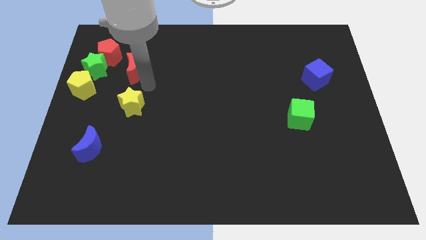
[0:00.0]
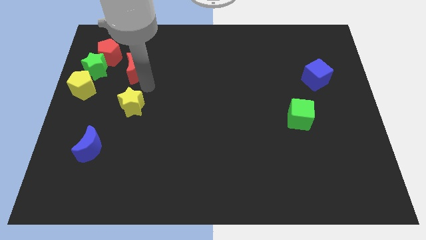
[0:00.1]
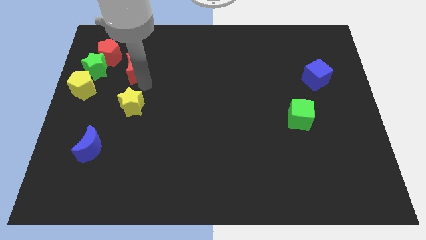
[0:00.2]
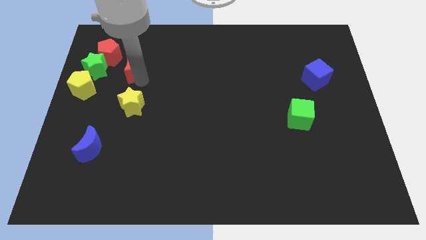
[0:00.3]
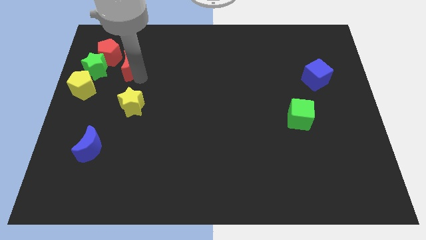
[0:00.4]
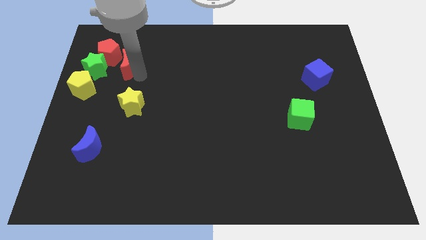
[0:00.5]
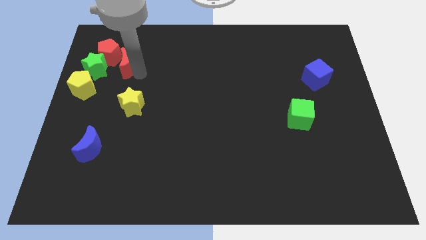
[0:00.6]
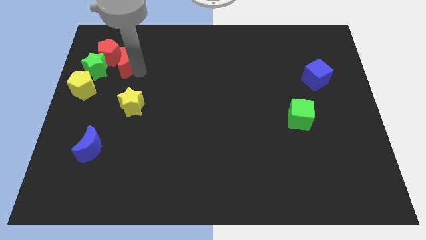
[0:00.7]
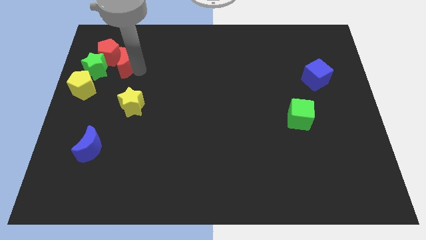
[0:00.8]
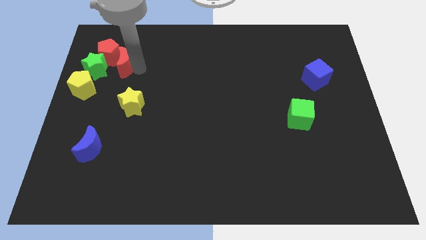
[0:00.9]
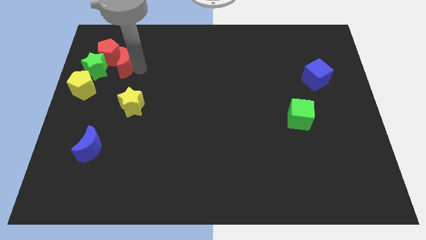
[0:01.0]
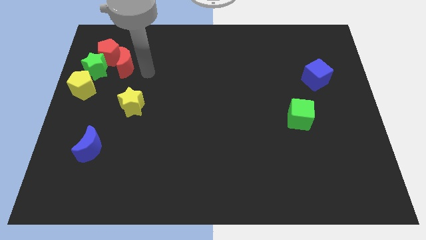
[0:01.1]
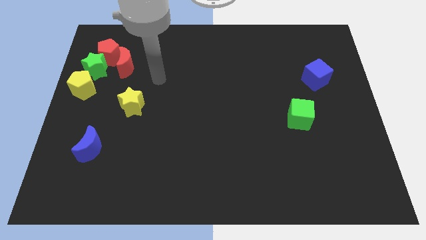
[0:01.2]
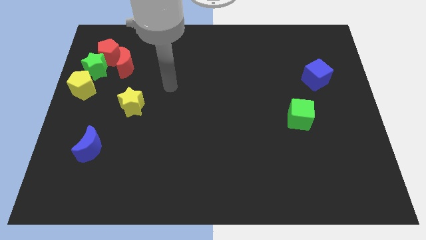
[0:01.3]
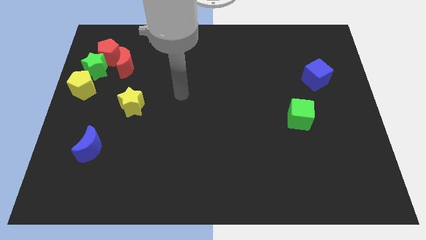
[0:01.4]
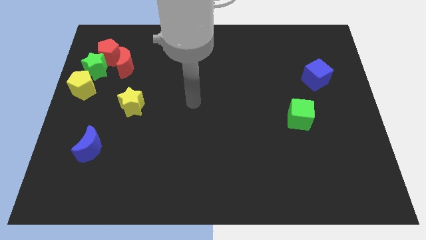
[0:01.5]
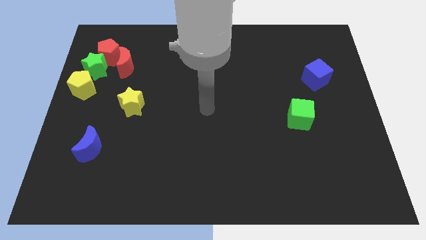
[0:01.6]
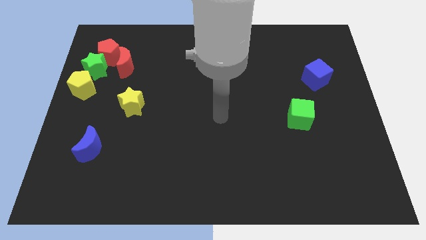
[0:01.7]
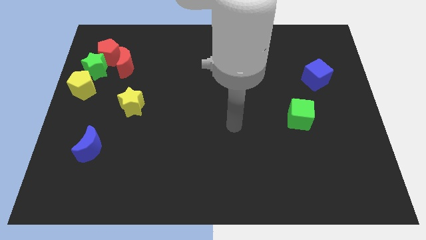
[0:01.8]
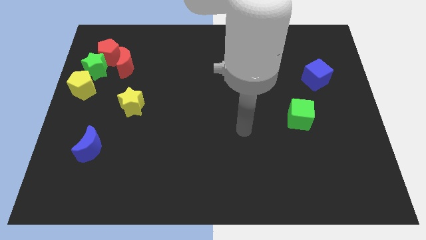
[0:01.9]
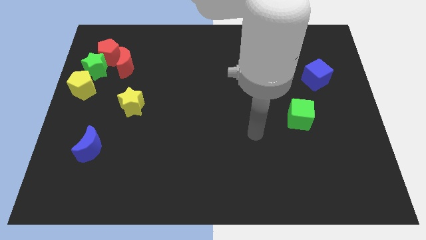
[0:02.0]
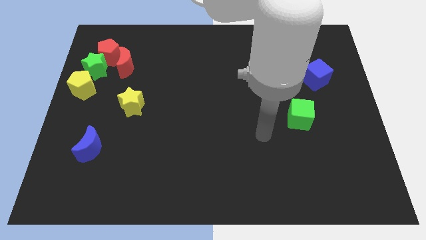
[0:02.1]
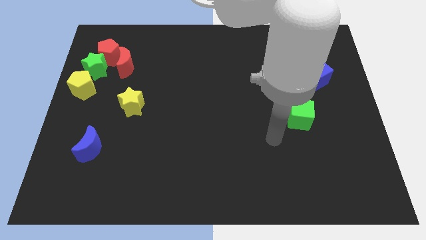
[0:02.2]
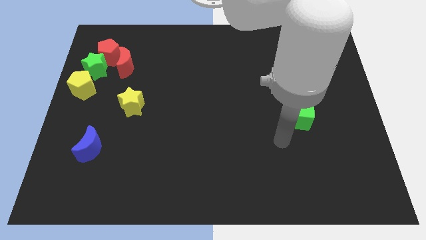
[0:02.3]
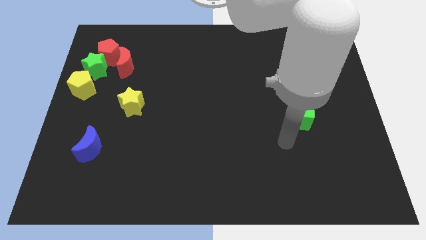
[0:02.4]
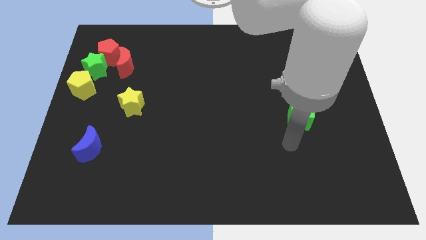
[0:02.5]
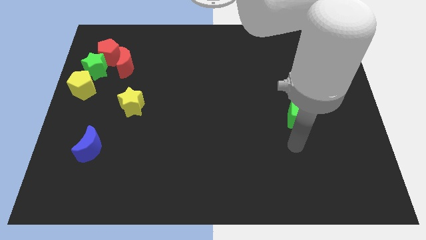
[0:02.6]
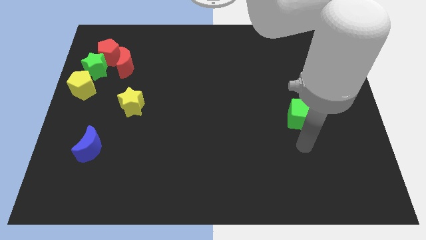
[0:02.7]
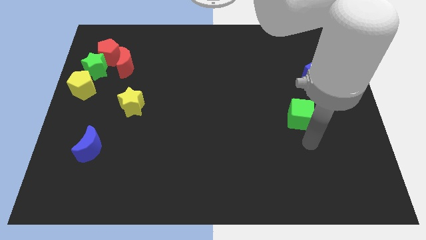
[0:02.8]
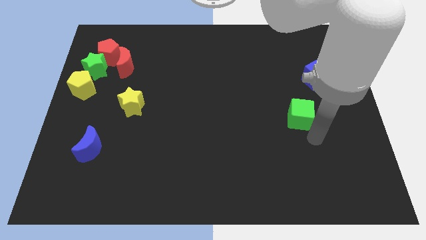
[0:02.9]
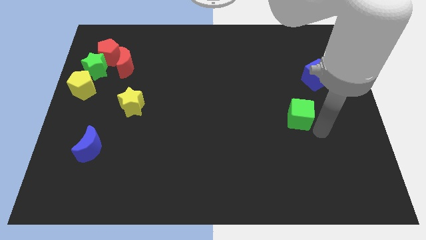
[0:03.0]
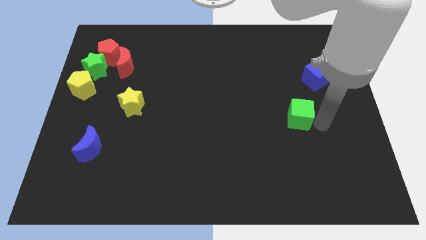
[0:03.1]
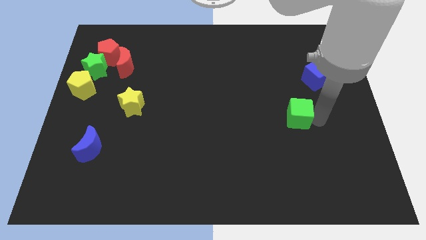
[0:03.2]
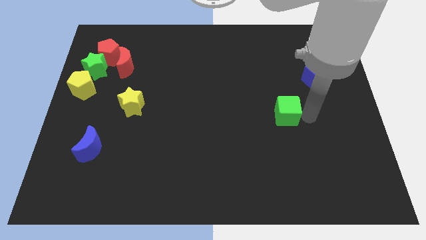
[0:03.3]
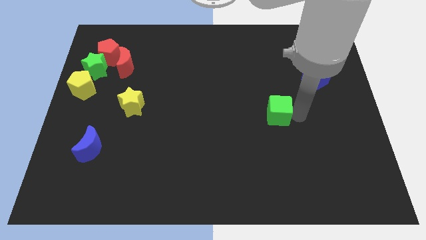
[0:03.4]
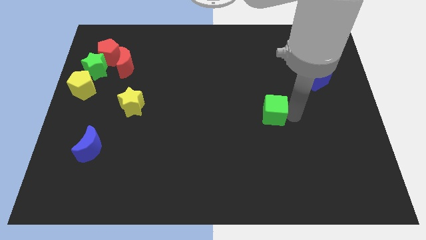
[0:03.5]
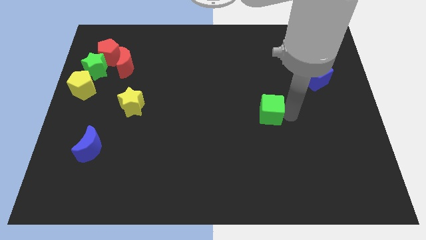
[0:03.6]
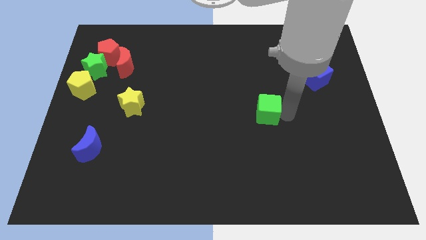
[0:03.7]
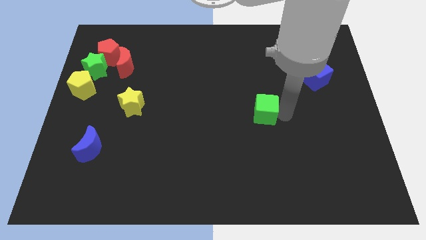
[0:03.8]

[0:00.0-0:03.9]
move the red crescent into the red pentagon

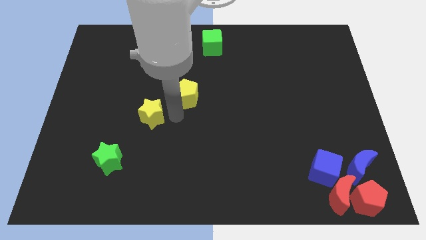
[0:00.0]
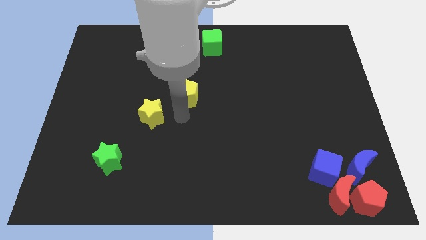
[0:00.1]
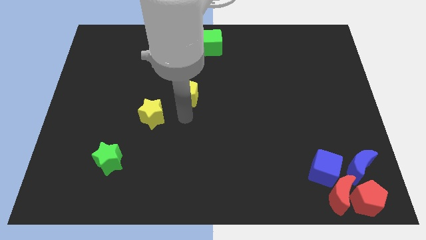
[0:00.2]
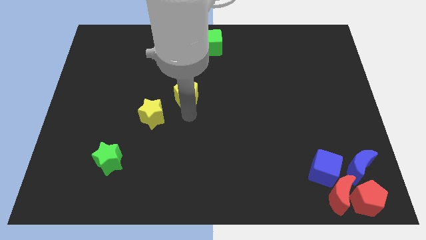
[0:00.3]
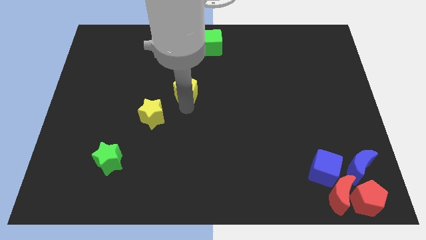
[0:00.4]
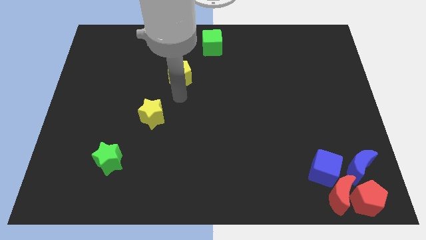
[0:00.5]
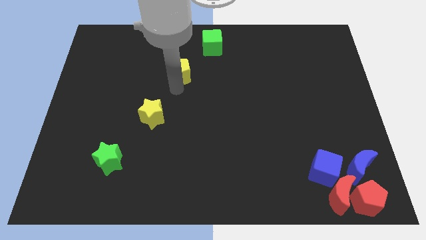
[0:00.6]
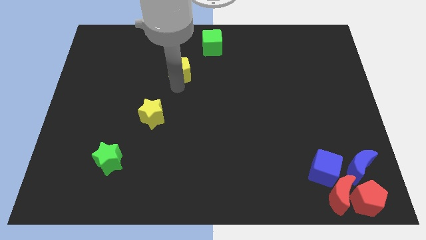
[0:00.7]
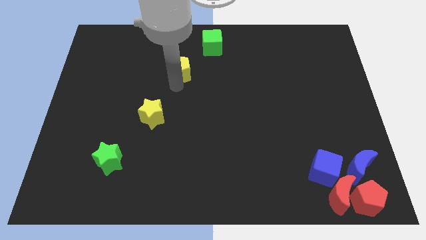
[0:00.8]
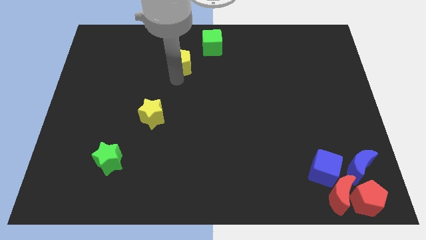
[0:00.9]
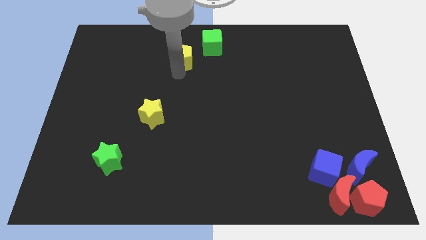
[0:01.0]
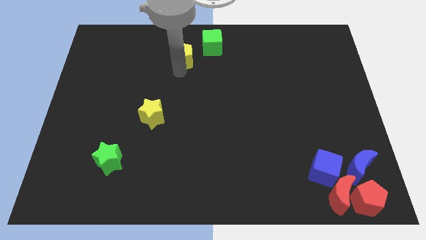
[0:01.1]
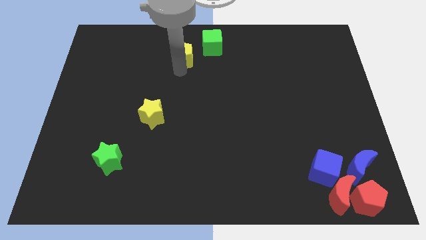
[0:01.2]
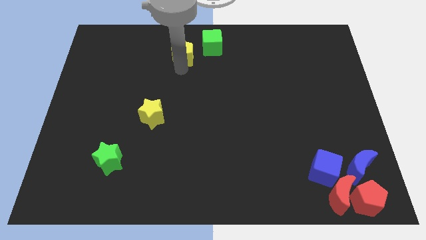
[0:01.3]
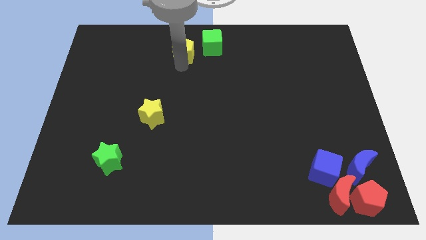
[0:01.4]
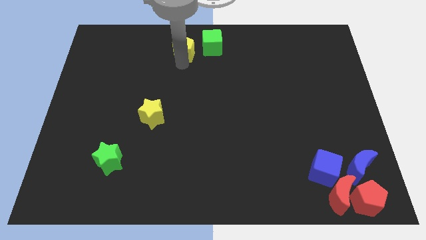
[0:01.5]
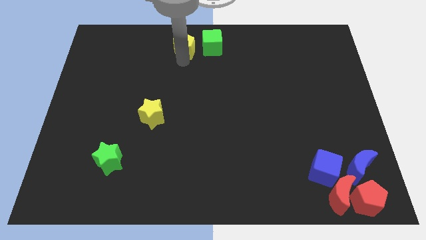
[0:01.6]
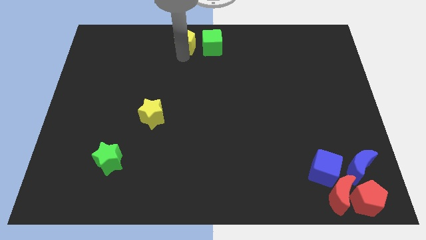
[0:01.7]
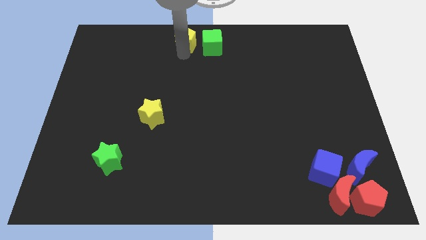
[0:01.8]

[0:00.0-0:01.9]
push the yellow pentagon towards the green cube on the top left of the board

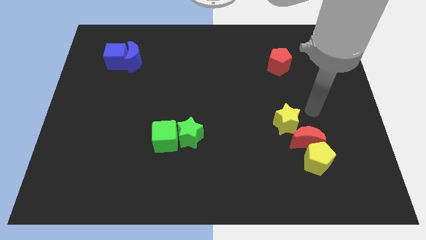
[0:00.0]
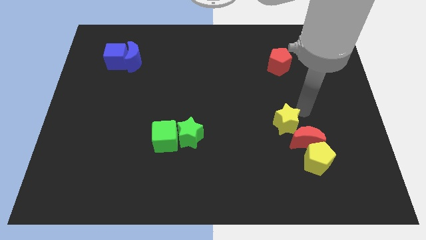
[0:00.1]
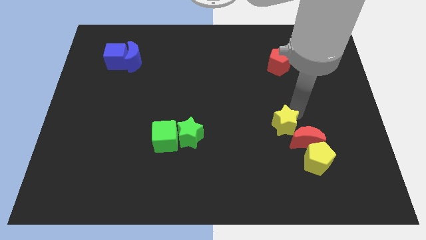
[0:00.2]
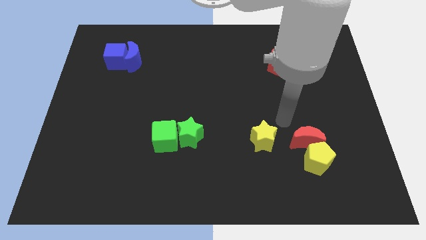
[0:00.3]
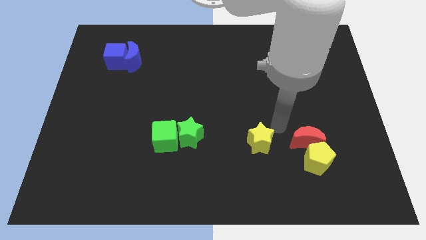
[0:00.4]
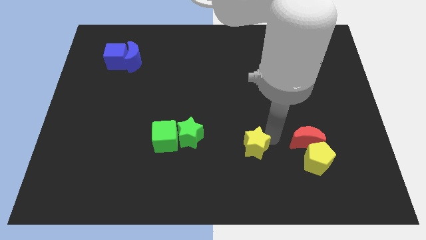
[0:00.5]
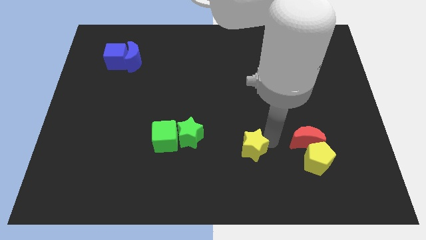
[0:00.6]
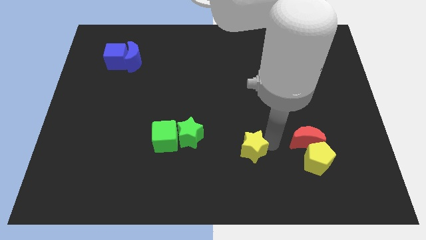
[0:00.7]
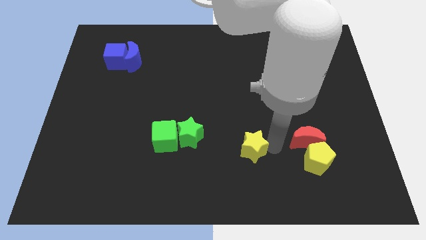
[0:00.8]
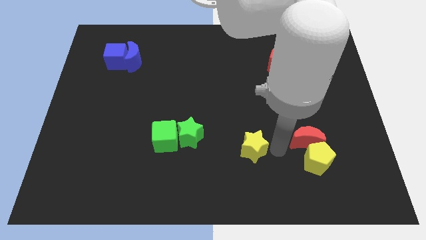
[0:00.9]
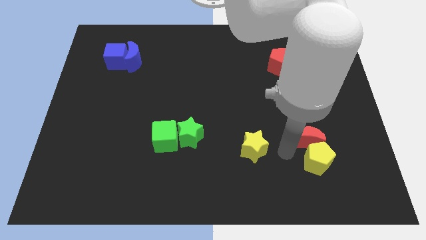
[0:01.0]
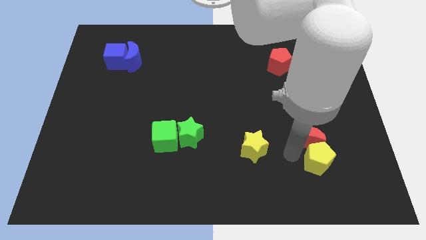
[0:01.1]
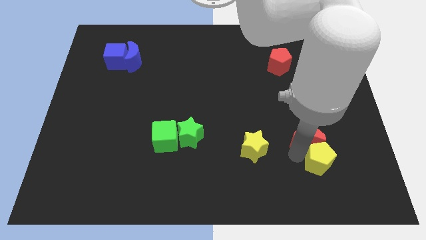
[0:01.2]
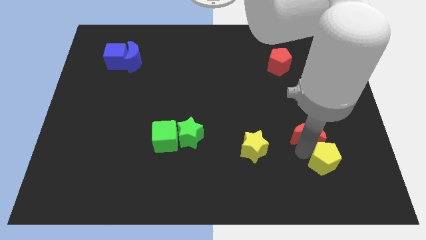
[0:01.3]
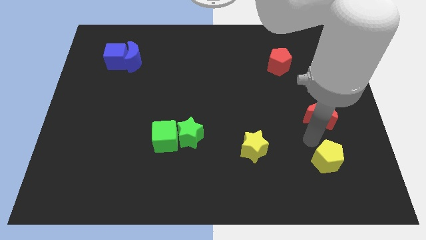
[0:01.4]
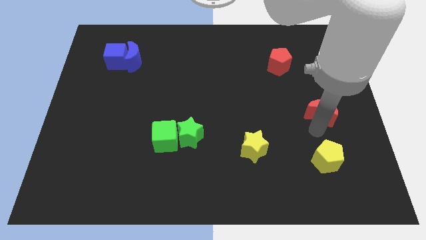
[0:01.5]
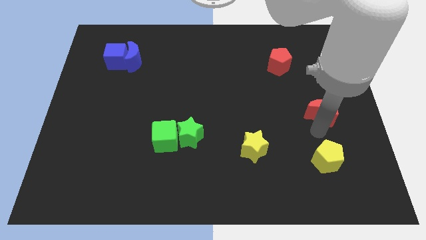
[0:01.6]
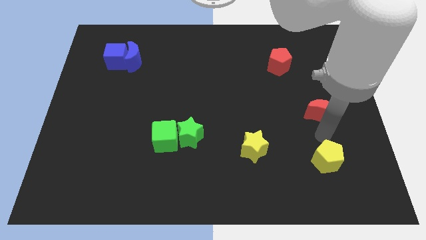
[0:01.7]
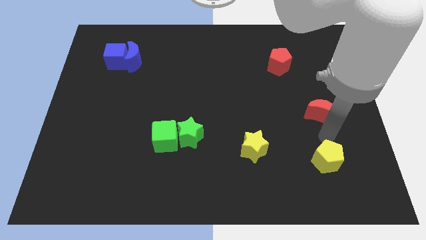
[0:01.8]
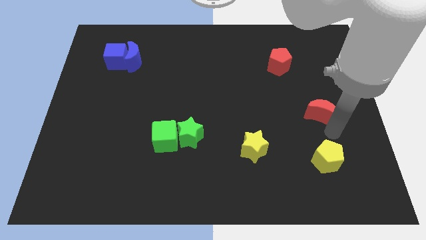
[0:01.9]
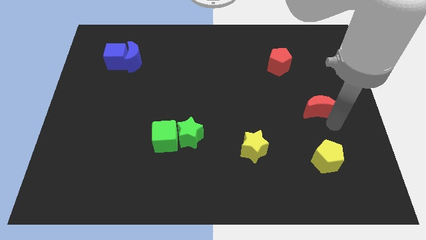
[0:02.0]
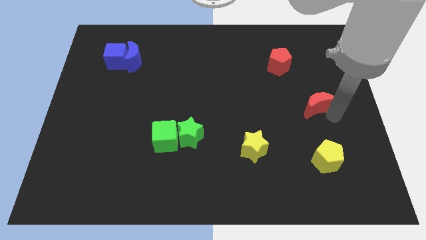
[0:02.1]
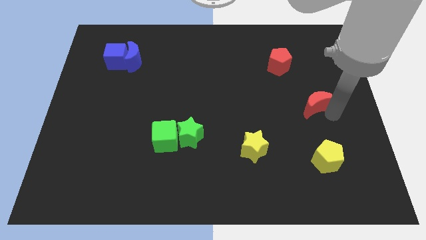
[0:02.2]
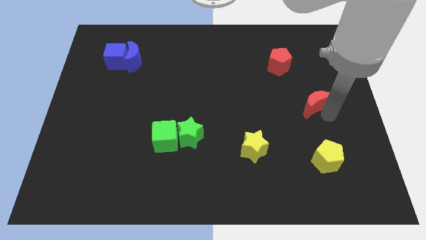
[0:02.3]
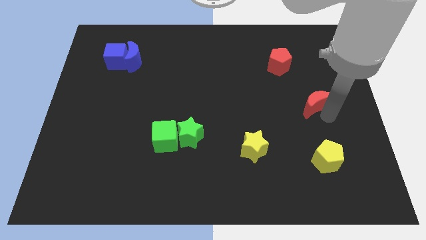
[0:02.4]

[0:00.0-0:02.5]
separate red crescent and yellow star from yellow pentagon

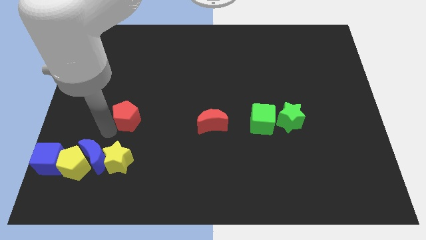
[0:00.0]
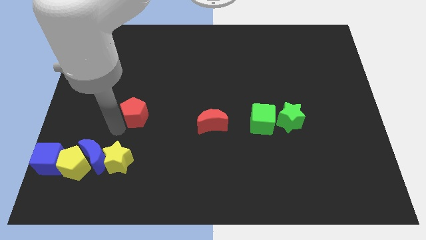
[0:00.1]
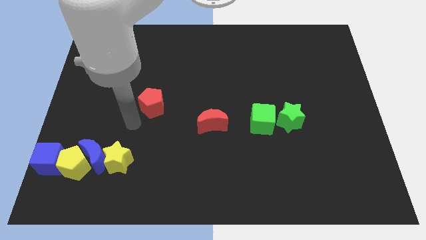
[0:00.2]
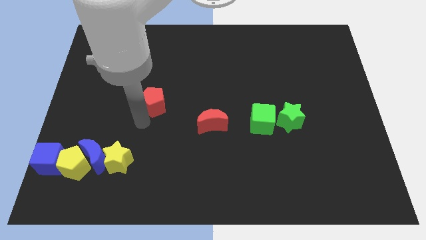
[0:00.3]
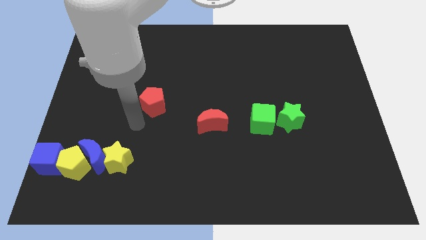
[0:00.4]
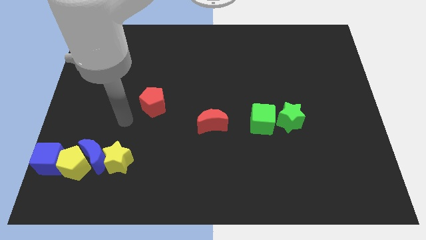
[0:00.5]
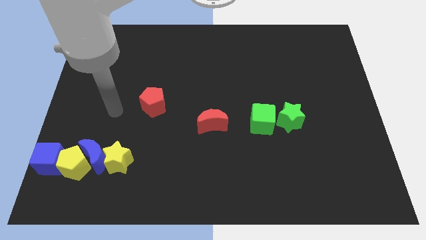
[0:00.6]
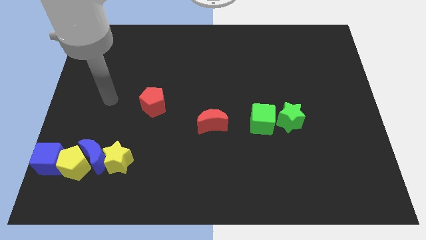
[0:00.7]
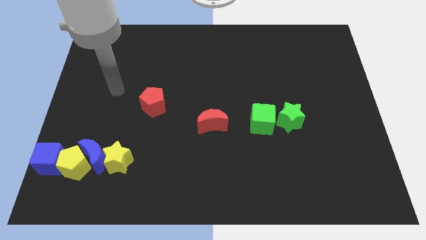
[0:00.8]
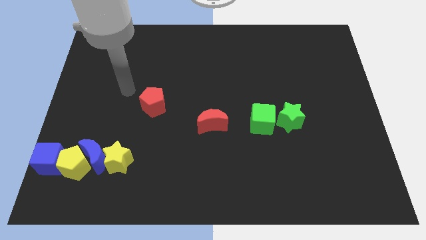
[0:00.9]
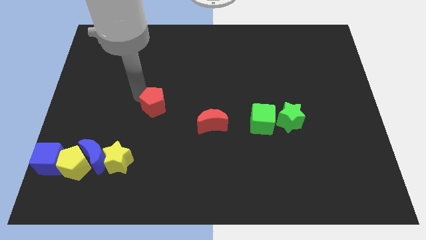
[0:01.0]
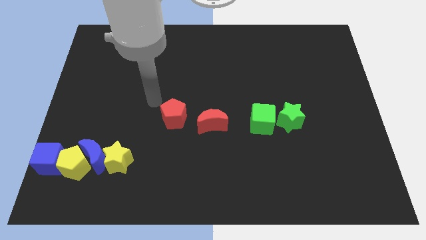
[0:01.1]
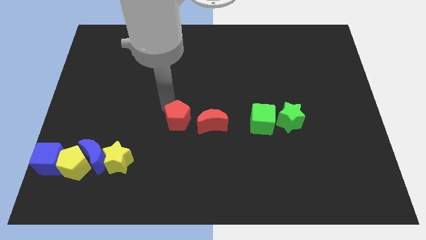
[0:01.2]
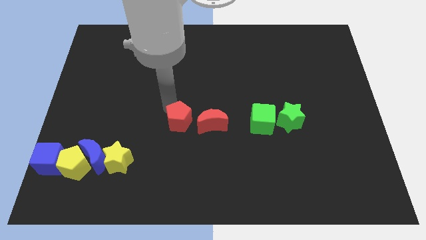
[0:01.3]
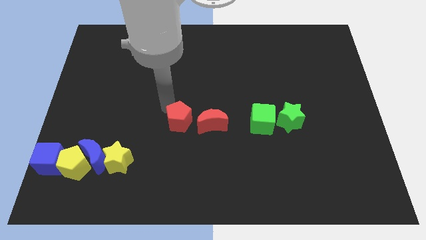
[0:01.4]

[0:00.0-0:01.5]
place the red pentagon left to the red moon
